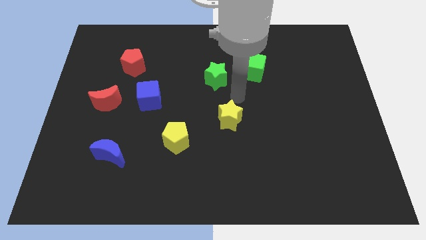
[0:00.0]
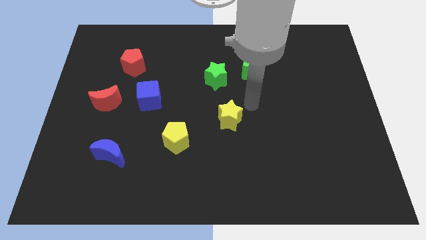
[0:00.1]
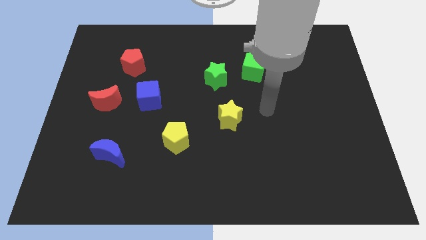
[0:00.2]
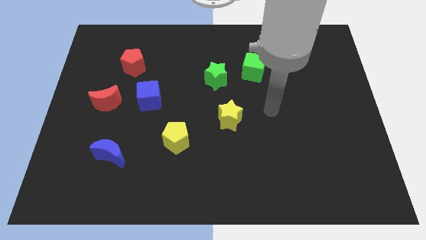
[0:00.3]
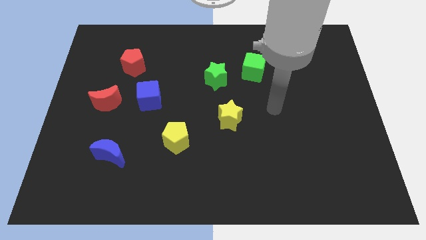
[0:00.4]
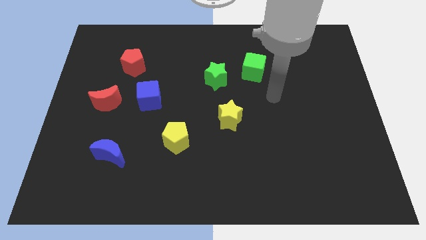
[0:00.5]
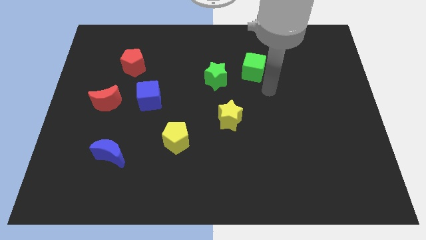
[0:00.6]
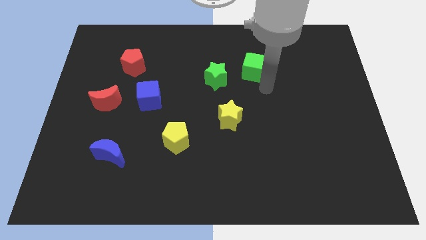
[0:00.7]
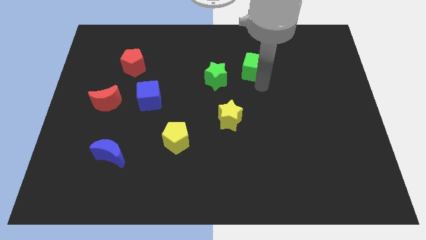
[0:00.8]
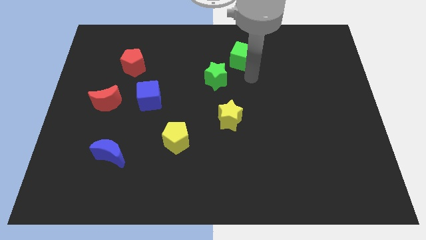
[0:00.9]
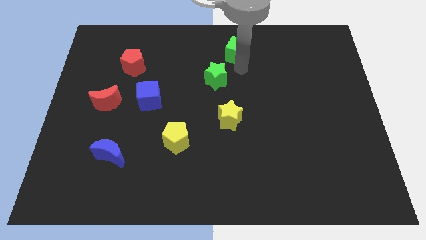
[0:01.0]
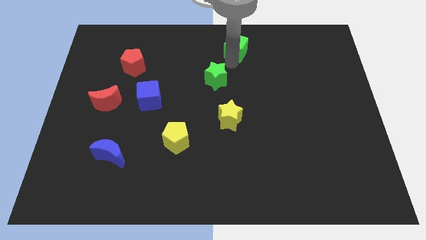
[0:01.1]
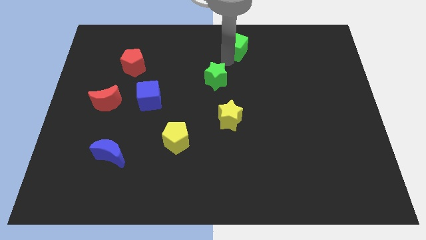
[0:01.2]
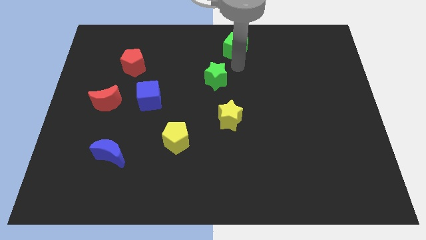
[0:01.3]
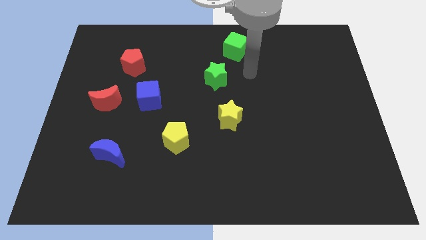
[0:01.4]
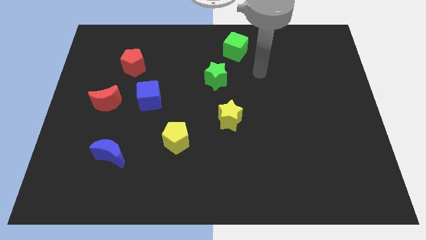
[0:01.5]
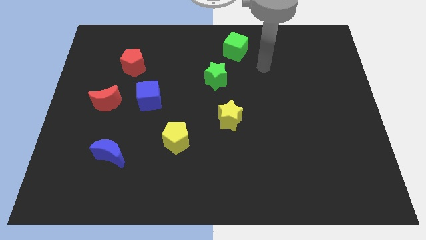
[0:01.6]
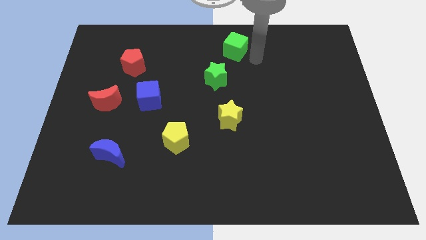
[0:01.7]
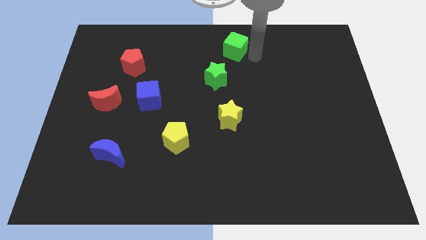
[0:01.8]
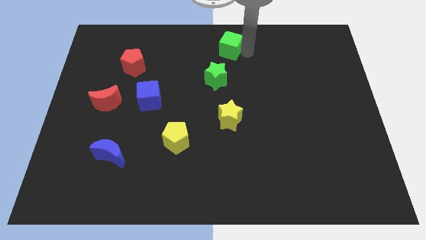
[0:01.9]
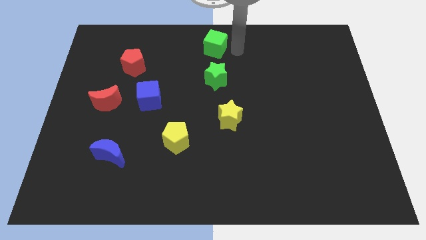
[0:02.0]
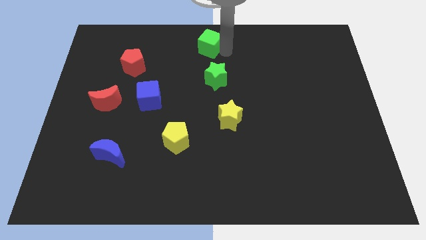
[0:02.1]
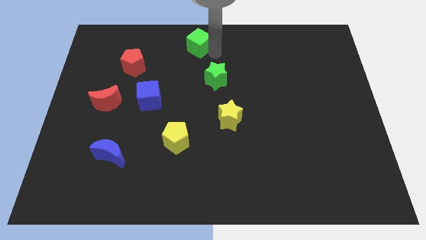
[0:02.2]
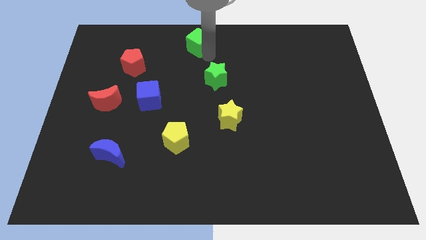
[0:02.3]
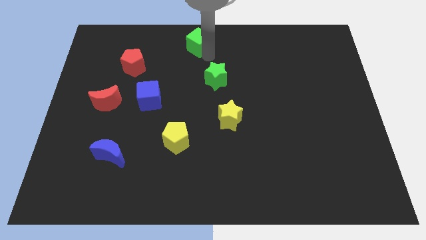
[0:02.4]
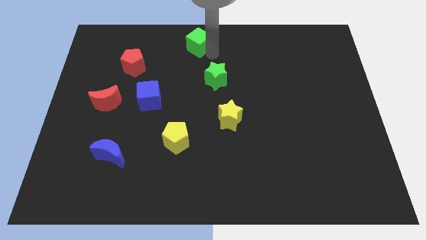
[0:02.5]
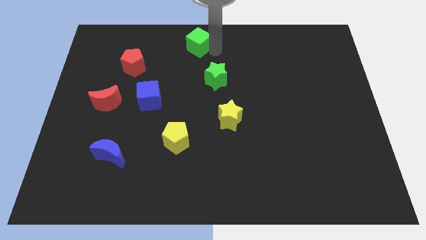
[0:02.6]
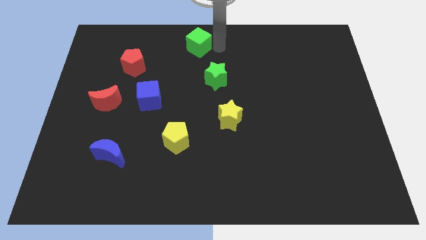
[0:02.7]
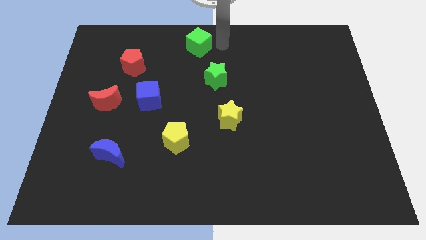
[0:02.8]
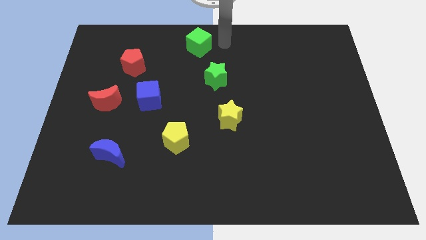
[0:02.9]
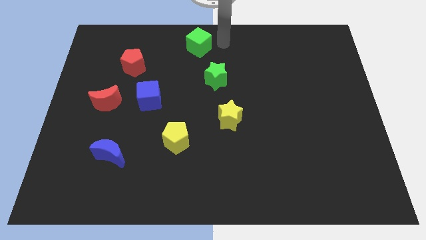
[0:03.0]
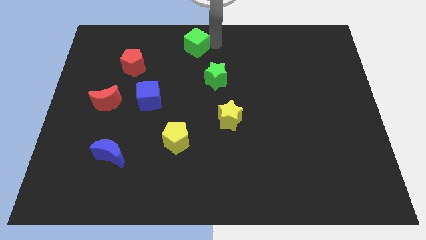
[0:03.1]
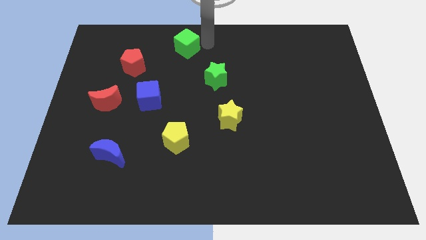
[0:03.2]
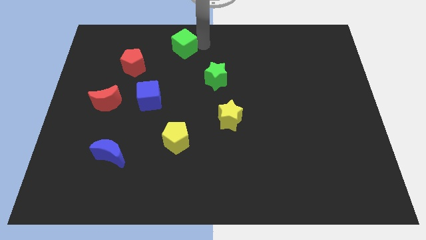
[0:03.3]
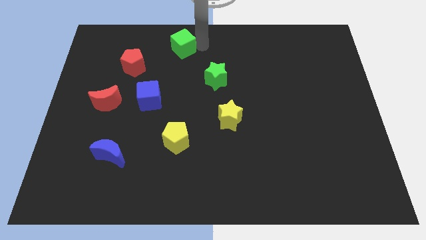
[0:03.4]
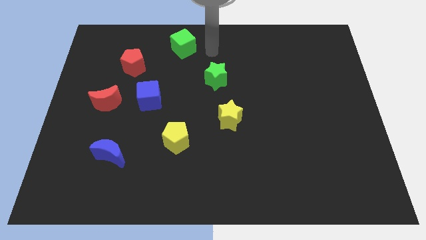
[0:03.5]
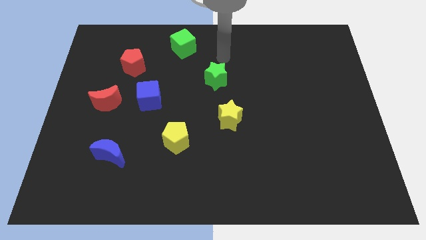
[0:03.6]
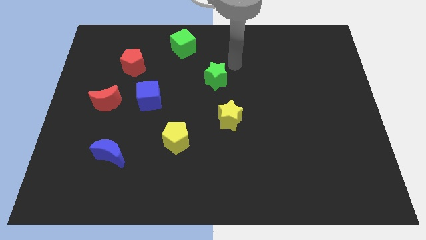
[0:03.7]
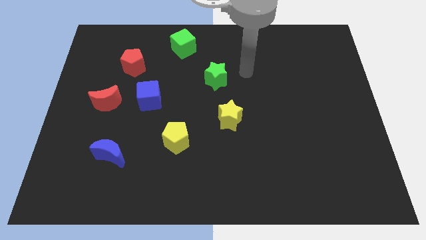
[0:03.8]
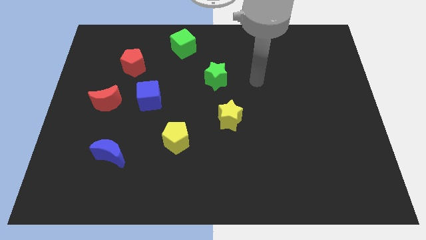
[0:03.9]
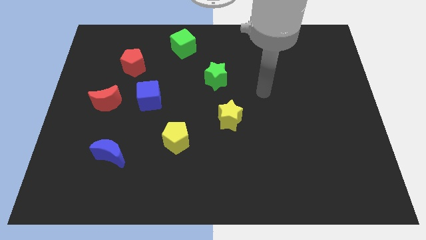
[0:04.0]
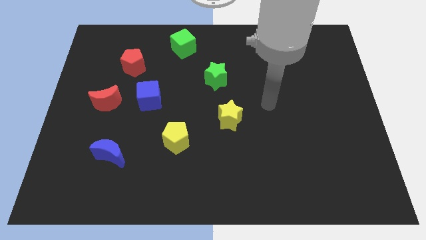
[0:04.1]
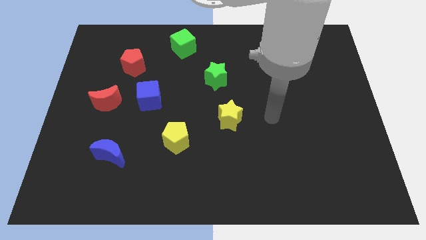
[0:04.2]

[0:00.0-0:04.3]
make a vertical line diagonally with the yellow star green star and the green cube

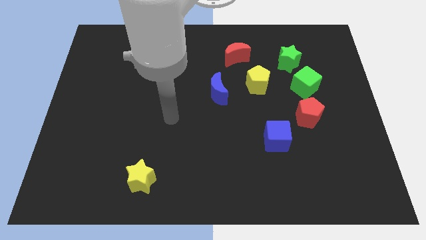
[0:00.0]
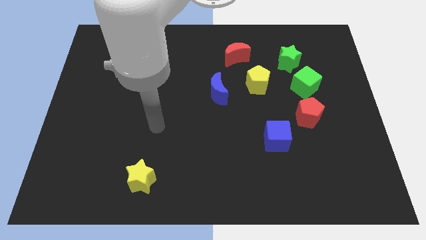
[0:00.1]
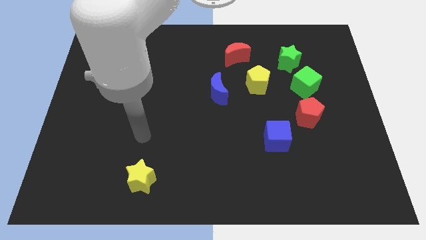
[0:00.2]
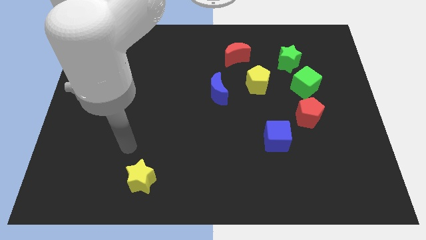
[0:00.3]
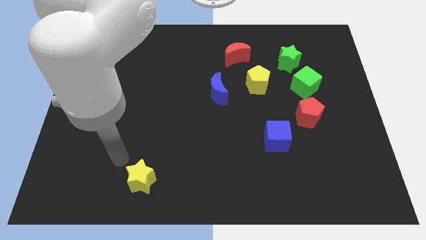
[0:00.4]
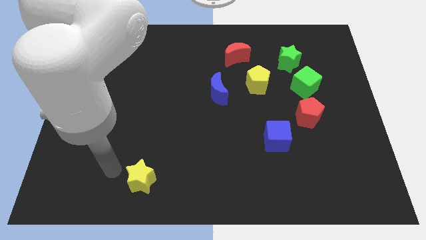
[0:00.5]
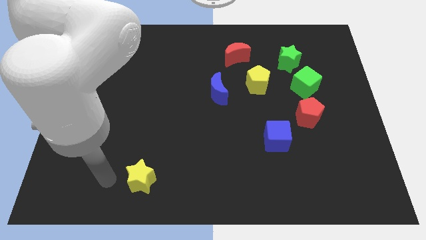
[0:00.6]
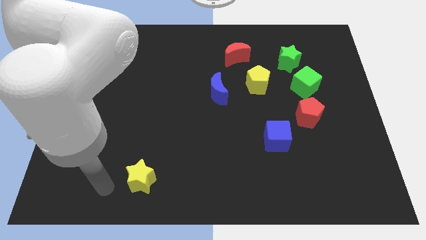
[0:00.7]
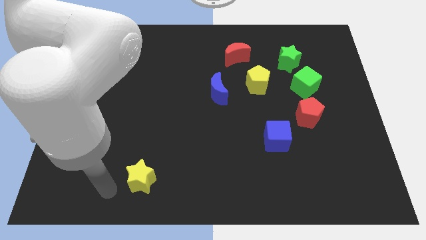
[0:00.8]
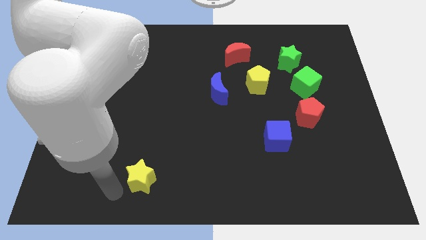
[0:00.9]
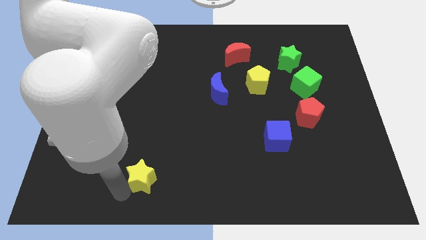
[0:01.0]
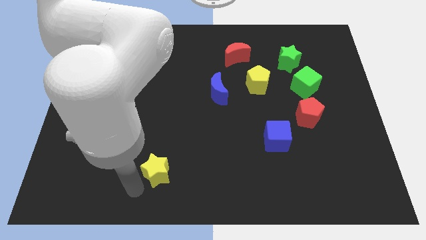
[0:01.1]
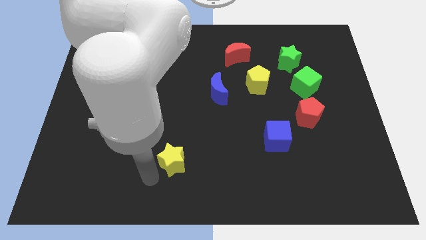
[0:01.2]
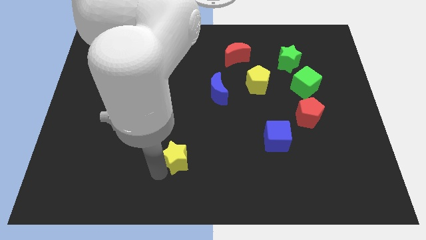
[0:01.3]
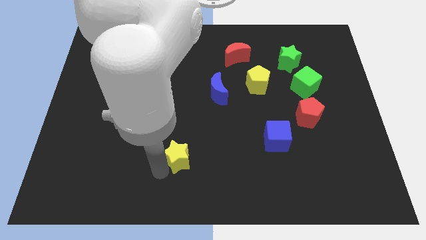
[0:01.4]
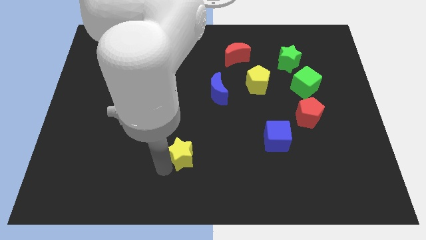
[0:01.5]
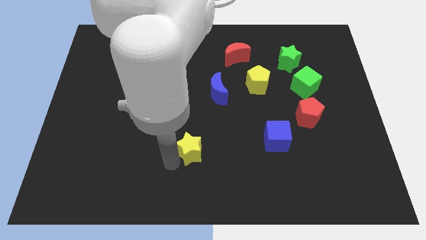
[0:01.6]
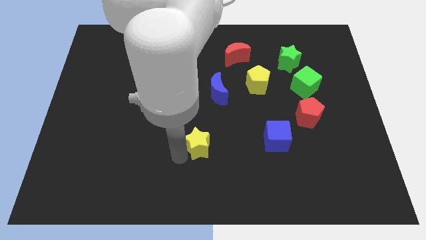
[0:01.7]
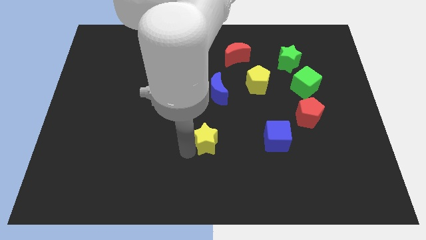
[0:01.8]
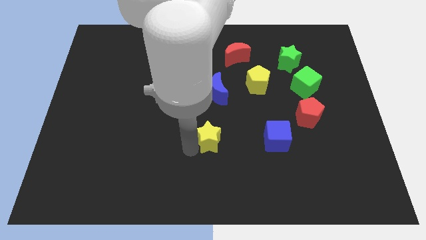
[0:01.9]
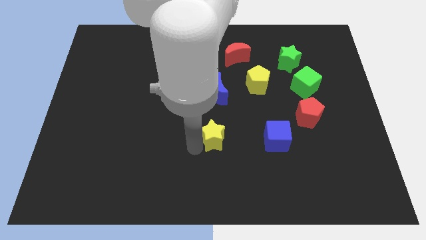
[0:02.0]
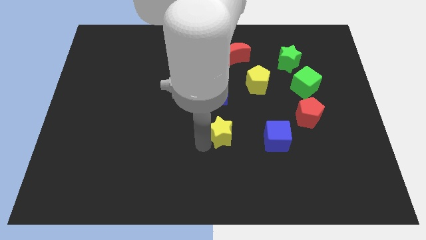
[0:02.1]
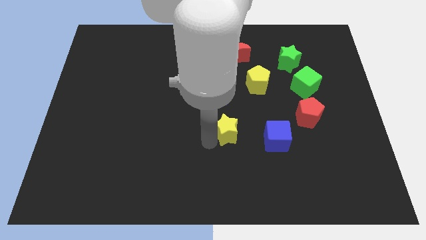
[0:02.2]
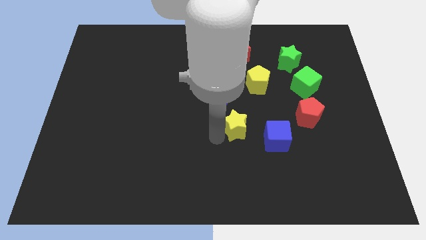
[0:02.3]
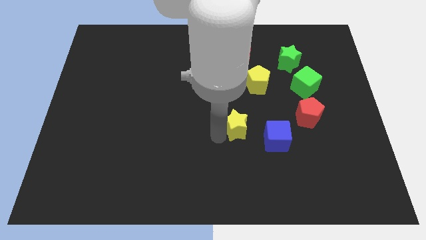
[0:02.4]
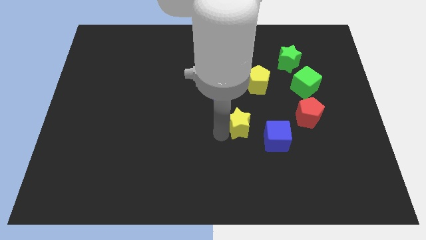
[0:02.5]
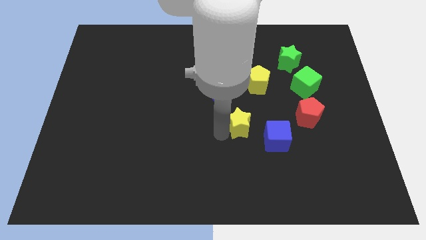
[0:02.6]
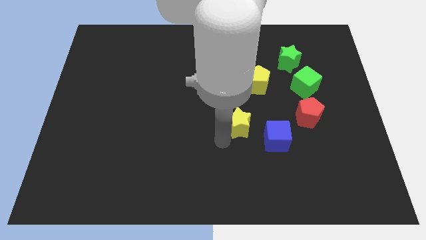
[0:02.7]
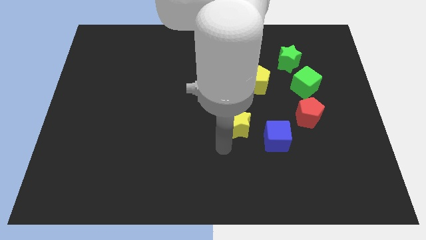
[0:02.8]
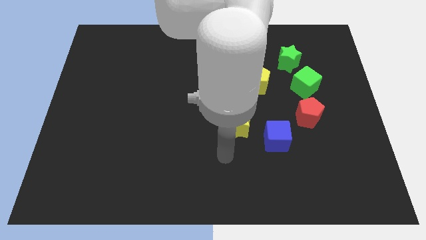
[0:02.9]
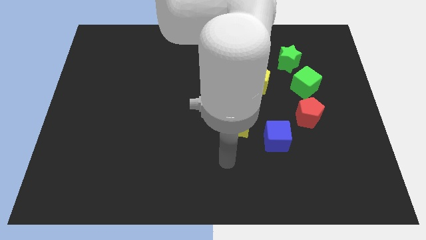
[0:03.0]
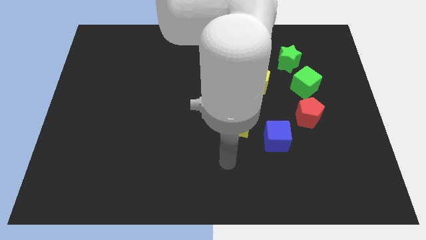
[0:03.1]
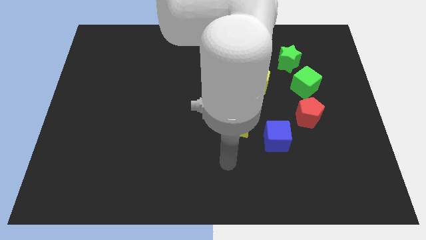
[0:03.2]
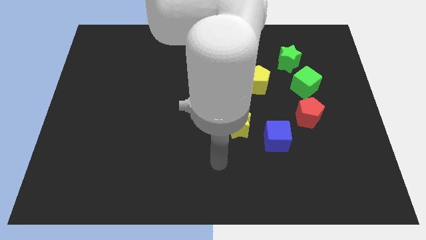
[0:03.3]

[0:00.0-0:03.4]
move the yellow star to the top right of the blue cube

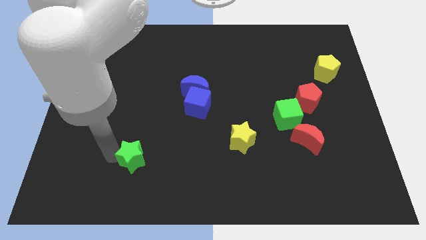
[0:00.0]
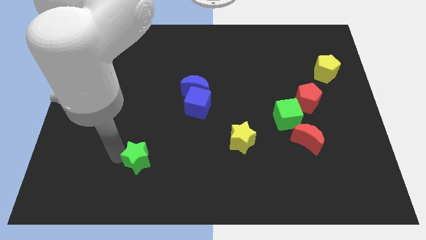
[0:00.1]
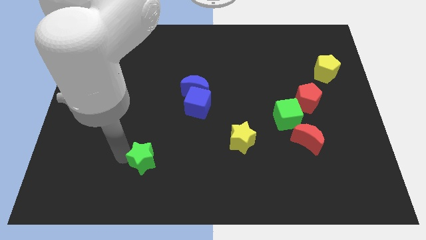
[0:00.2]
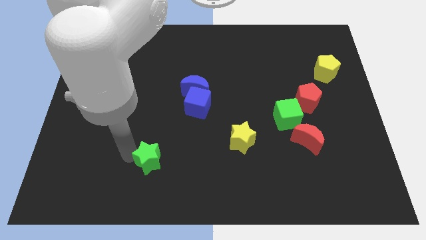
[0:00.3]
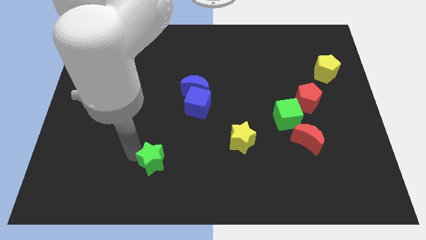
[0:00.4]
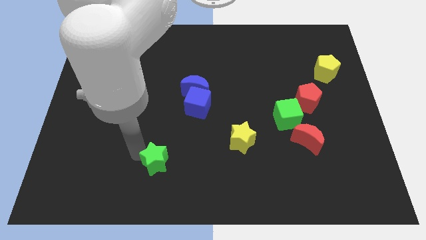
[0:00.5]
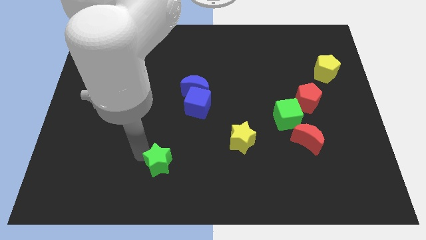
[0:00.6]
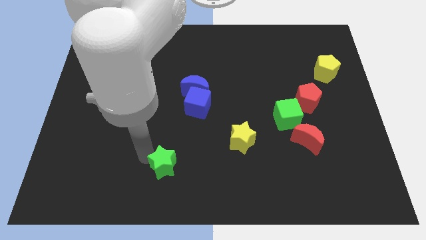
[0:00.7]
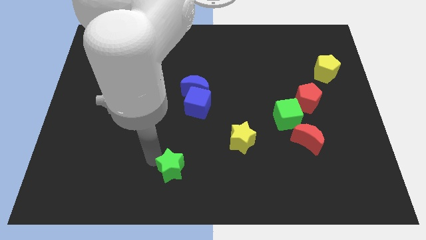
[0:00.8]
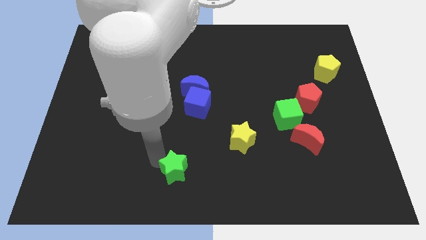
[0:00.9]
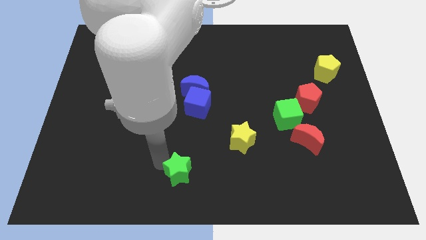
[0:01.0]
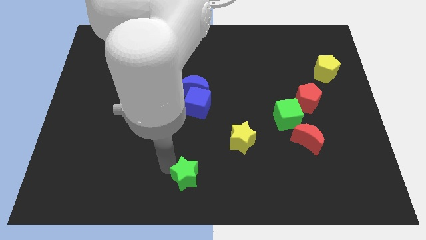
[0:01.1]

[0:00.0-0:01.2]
place the green star diagonally to the bottom left of the yellow star
